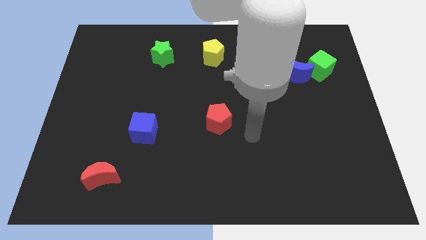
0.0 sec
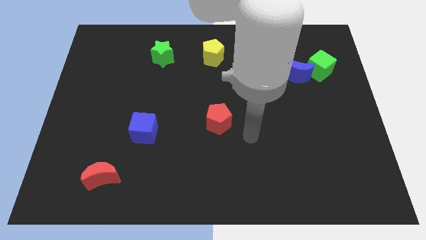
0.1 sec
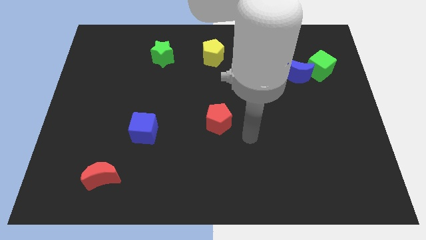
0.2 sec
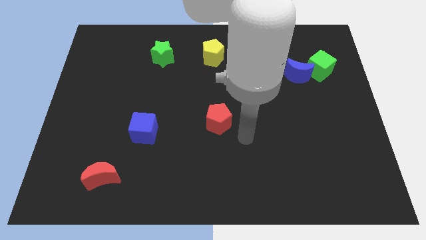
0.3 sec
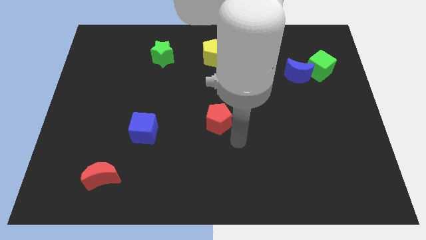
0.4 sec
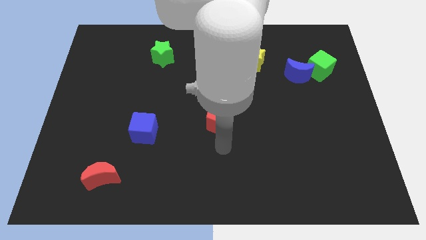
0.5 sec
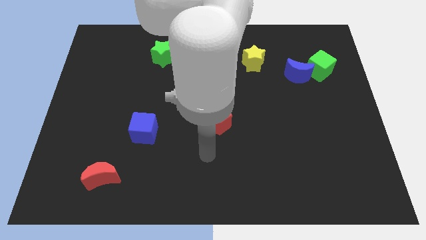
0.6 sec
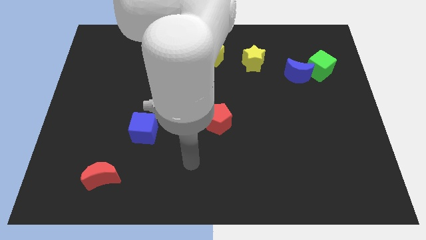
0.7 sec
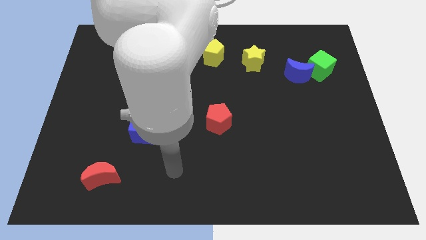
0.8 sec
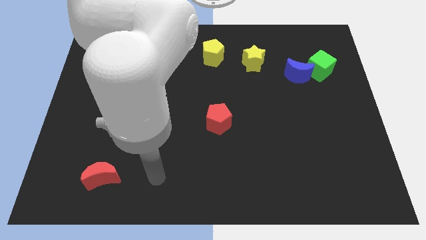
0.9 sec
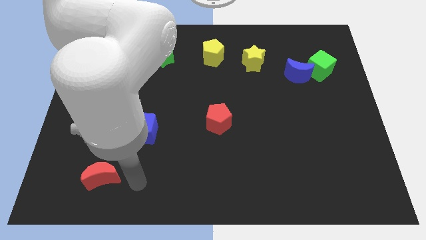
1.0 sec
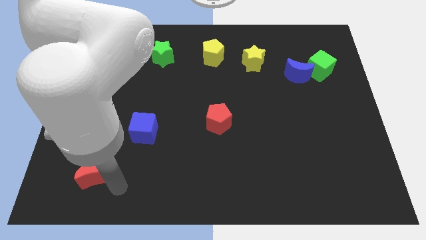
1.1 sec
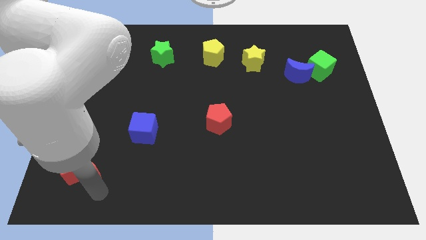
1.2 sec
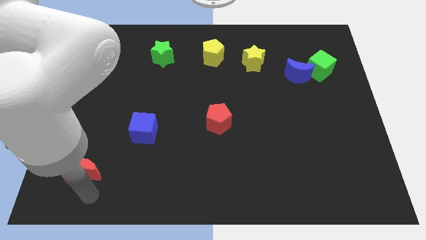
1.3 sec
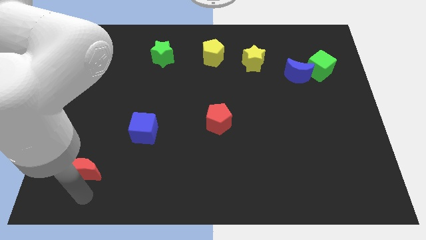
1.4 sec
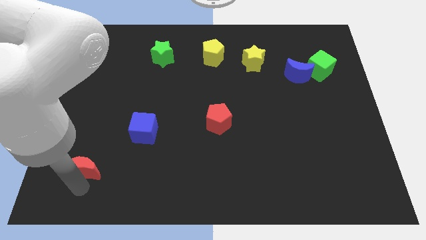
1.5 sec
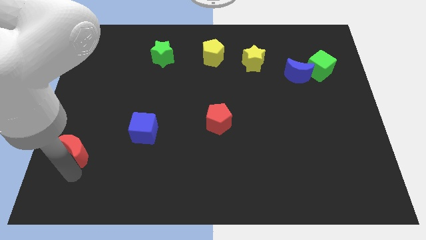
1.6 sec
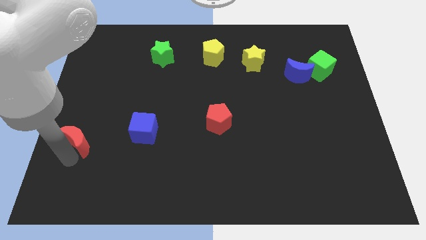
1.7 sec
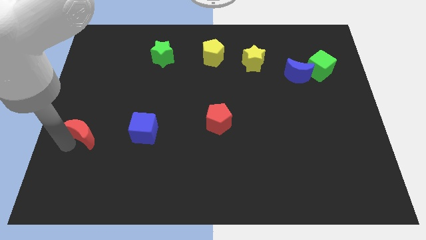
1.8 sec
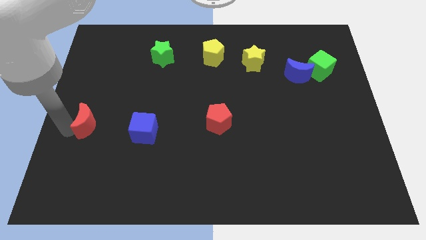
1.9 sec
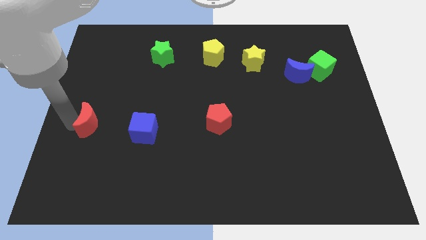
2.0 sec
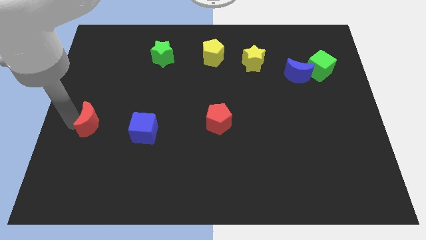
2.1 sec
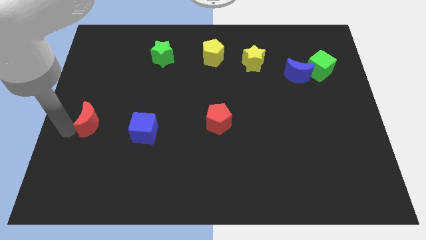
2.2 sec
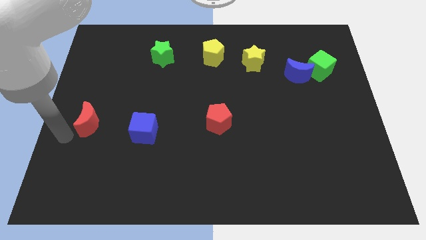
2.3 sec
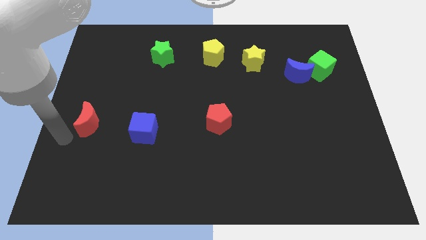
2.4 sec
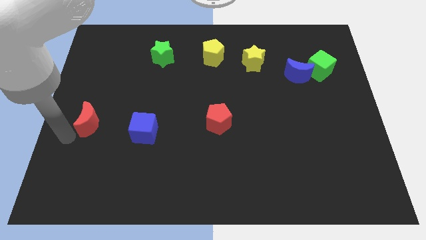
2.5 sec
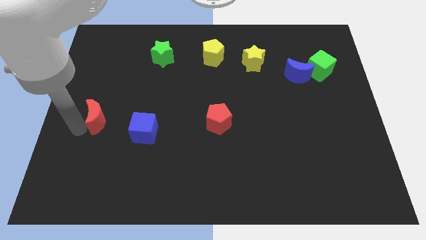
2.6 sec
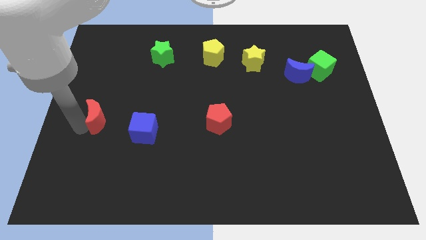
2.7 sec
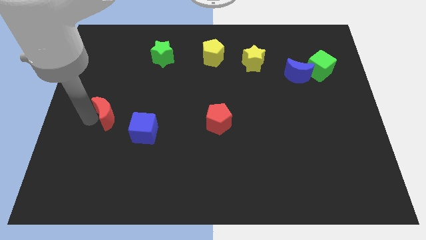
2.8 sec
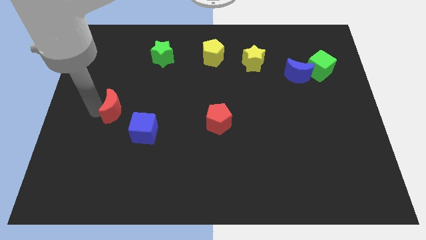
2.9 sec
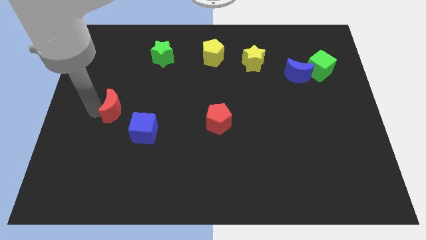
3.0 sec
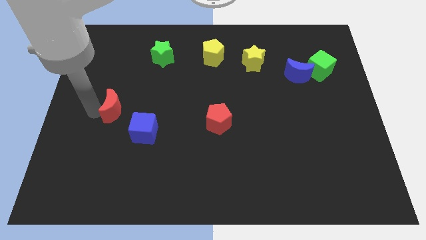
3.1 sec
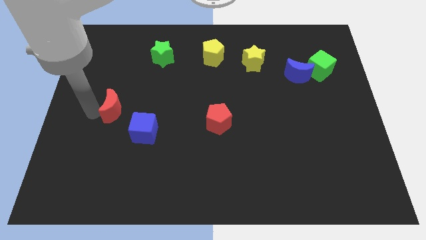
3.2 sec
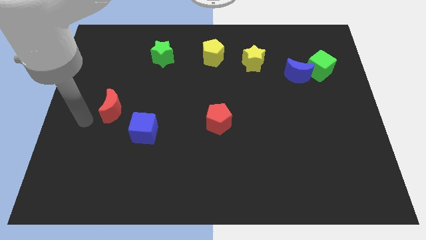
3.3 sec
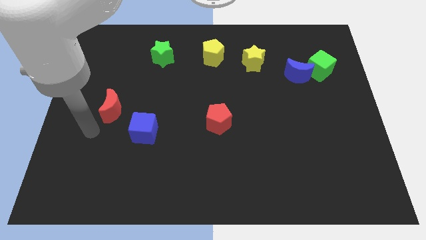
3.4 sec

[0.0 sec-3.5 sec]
move red crescent diagonally top left to the blue cube

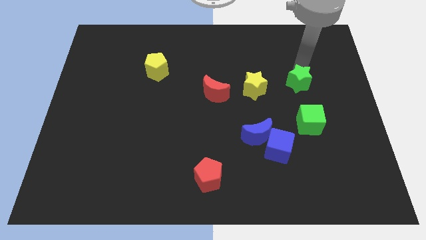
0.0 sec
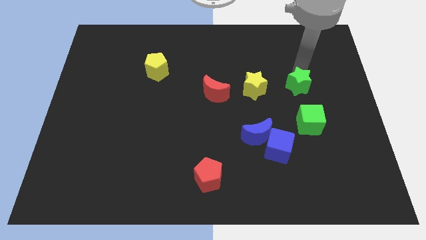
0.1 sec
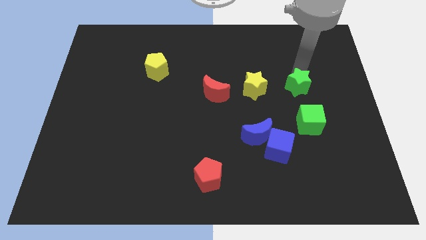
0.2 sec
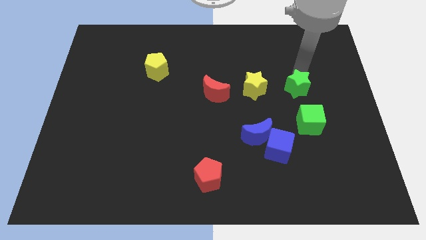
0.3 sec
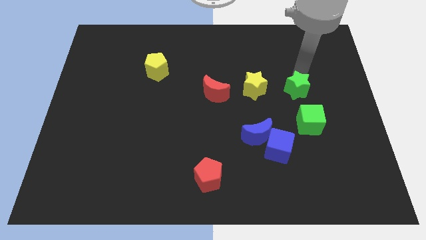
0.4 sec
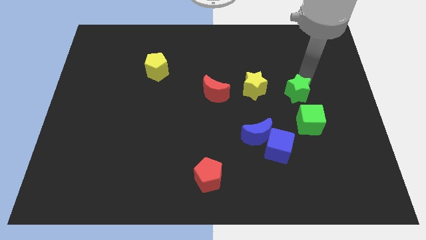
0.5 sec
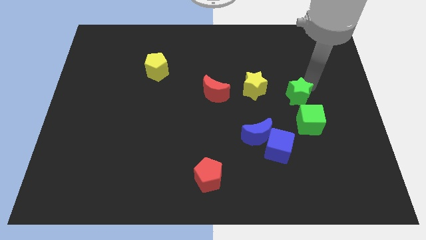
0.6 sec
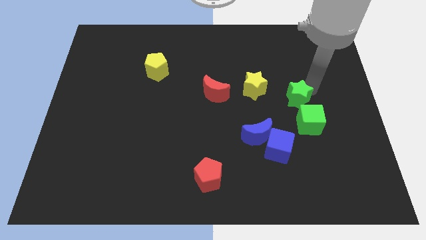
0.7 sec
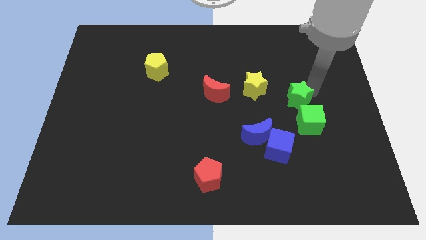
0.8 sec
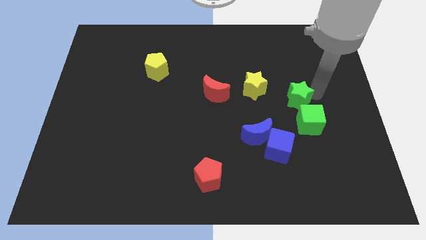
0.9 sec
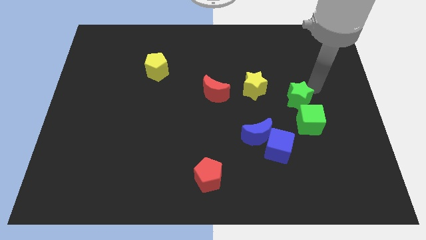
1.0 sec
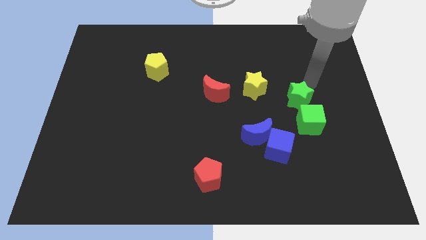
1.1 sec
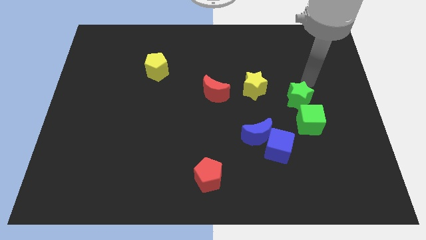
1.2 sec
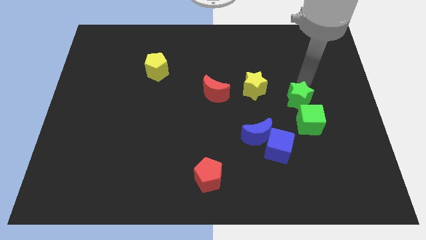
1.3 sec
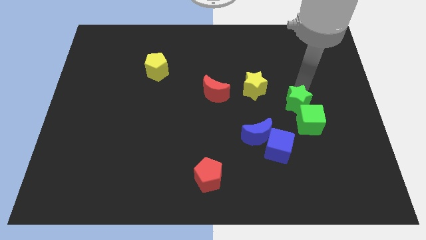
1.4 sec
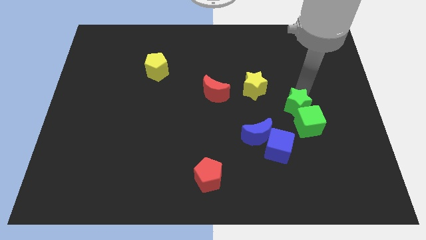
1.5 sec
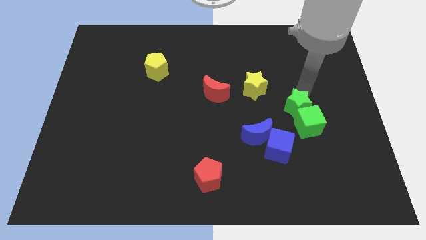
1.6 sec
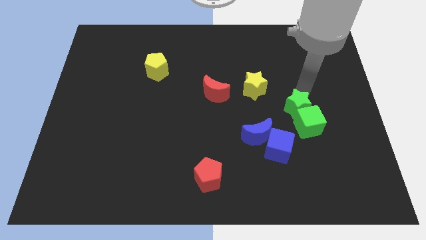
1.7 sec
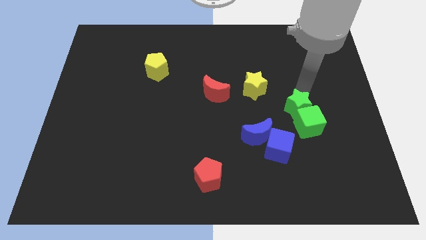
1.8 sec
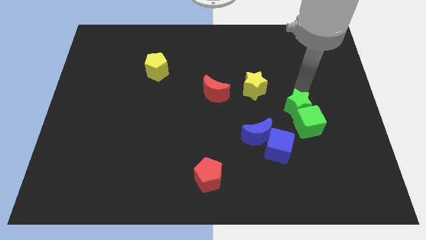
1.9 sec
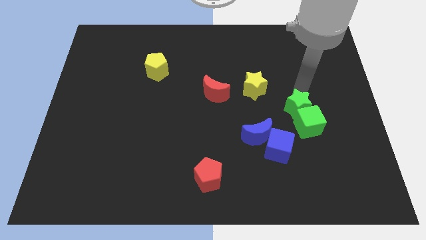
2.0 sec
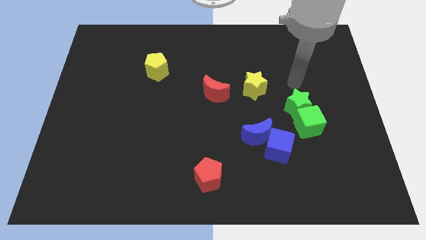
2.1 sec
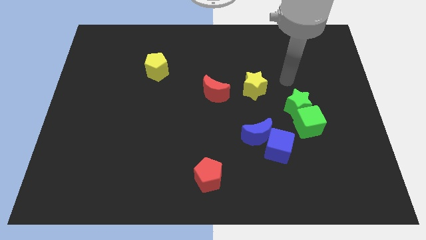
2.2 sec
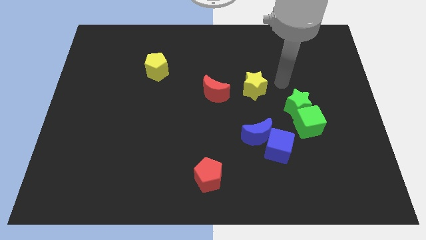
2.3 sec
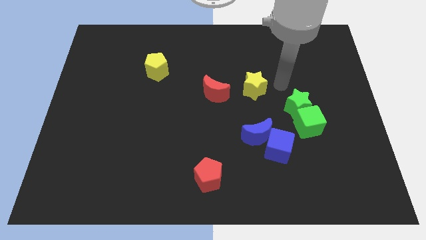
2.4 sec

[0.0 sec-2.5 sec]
push the green star into the green cube

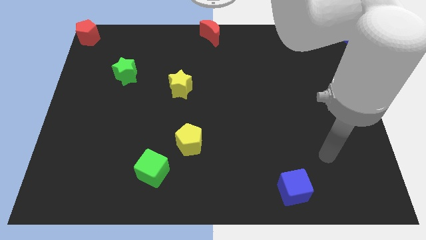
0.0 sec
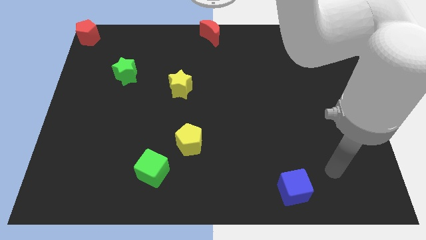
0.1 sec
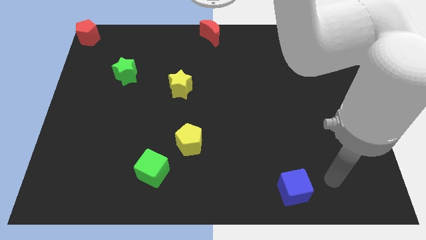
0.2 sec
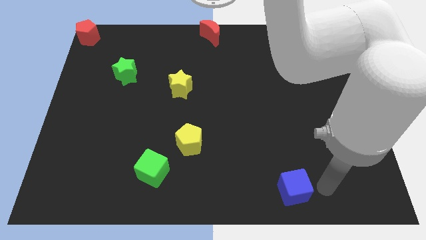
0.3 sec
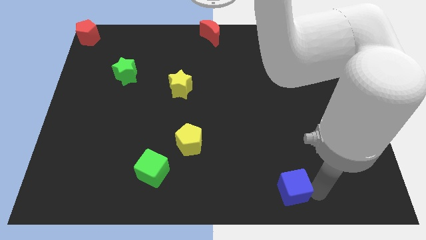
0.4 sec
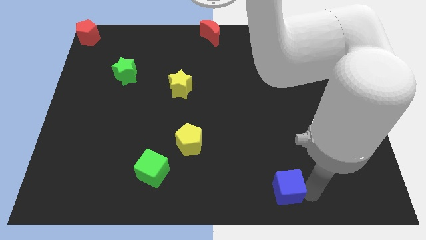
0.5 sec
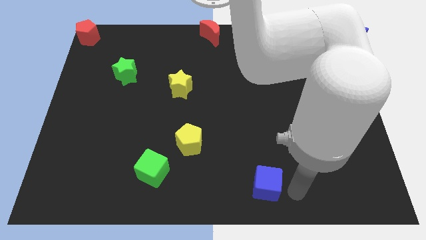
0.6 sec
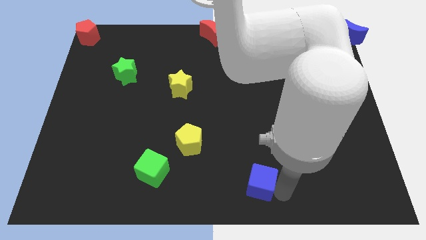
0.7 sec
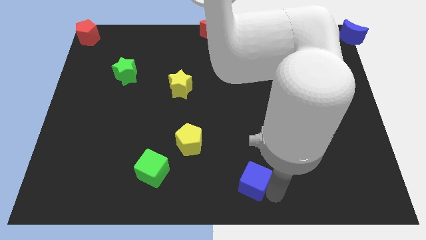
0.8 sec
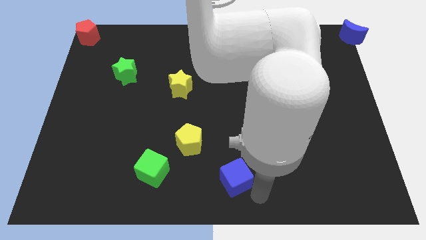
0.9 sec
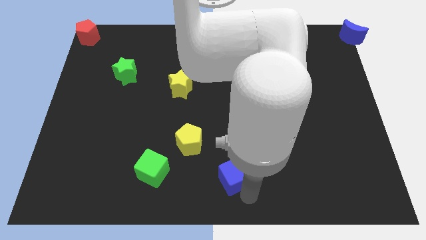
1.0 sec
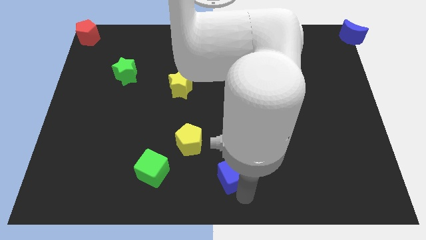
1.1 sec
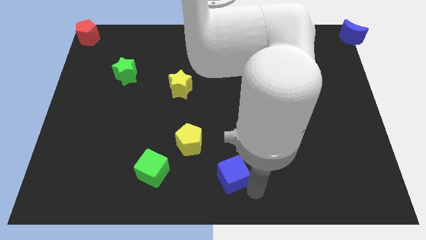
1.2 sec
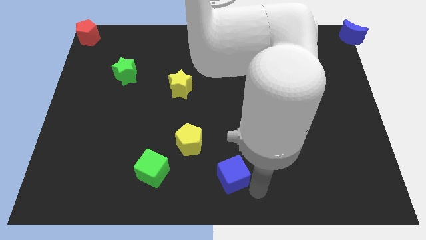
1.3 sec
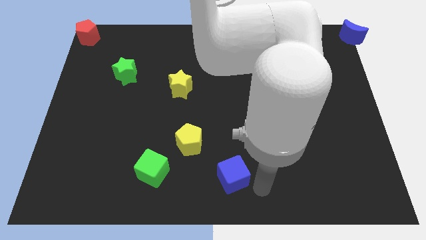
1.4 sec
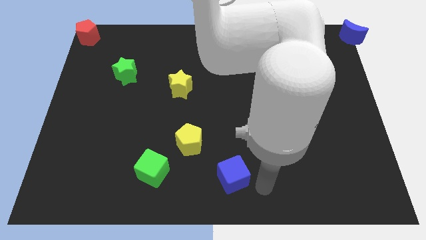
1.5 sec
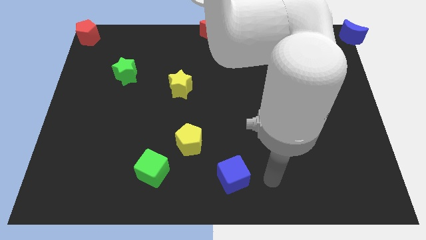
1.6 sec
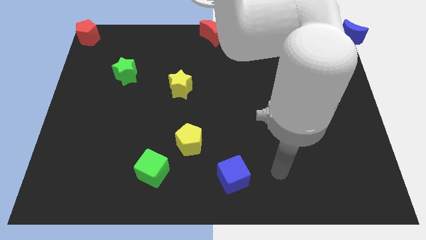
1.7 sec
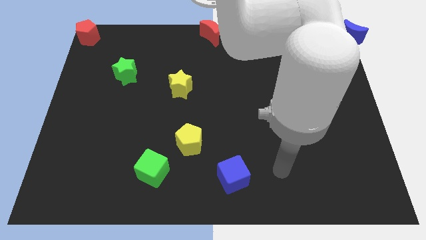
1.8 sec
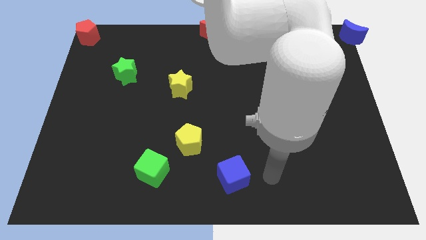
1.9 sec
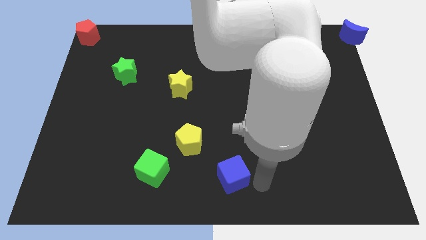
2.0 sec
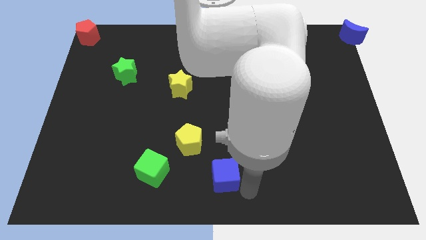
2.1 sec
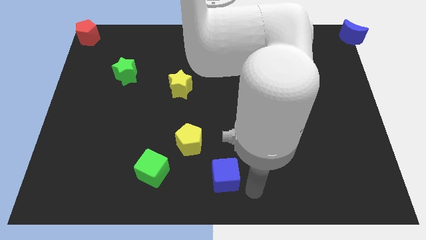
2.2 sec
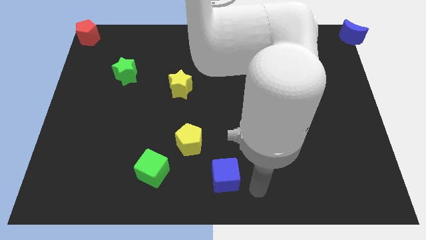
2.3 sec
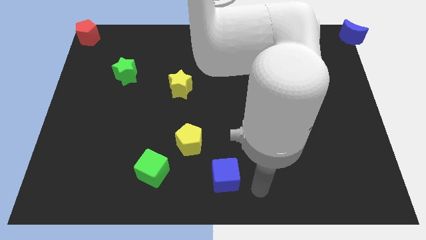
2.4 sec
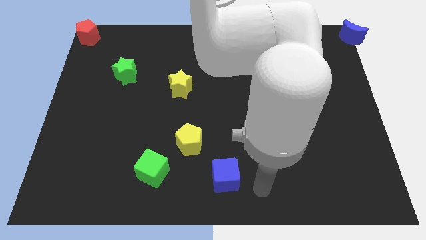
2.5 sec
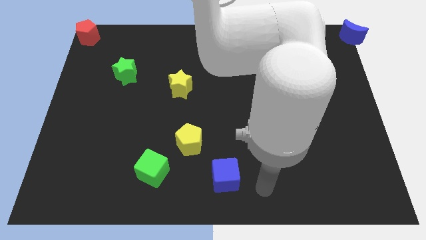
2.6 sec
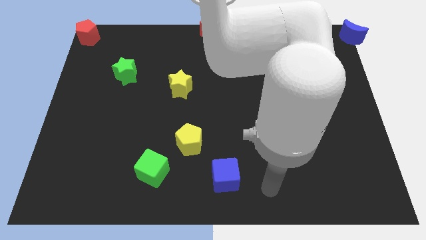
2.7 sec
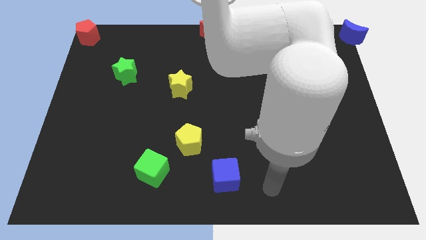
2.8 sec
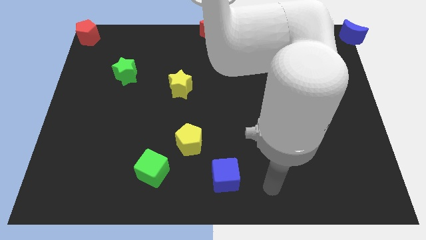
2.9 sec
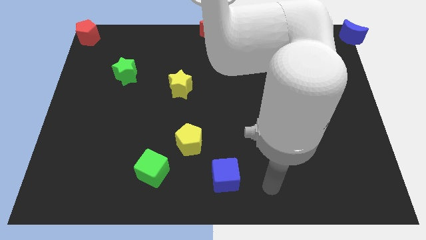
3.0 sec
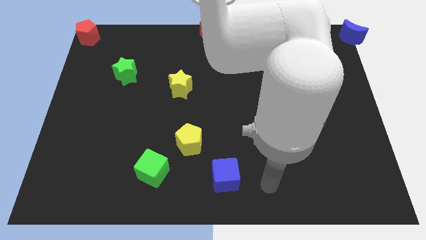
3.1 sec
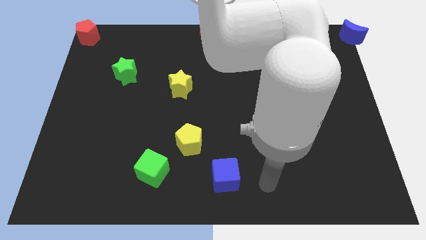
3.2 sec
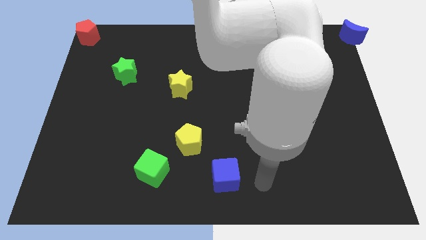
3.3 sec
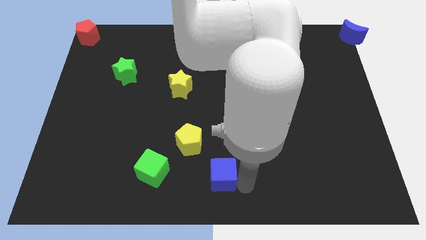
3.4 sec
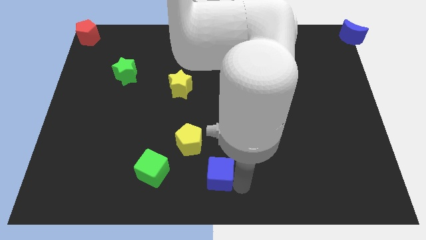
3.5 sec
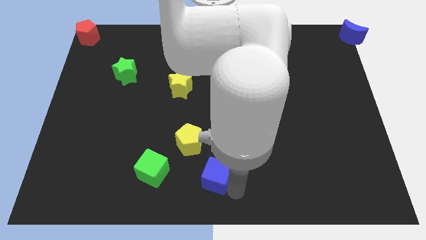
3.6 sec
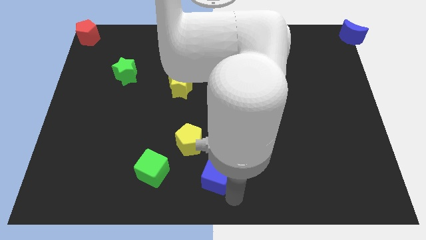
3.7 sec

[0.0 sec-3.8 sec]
move blue cube towards yellow pentagon
